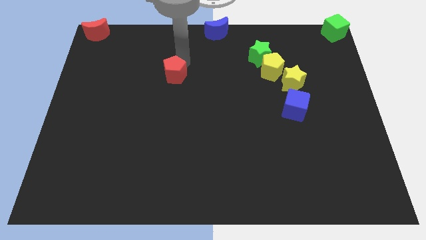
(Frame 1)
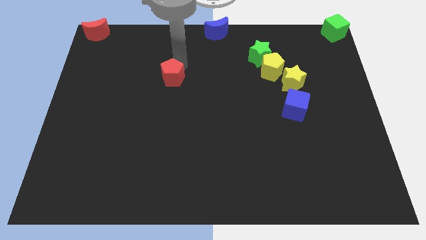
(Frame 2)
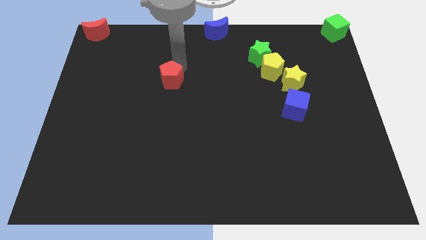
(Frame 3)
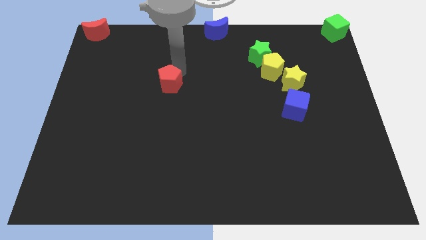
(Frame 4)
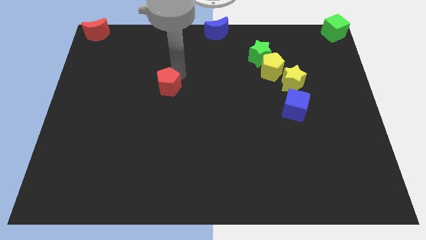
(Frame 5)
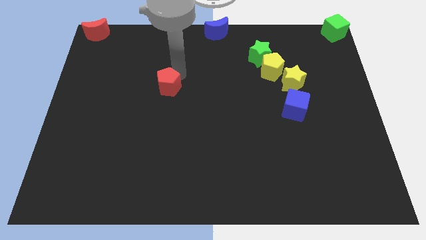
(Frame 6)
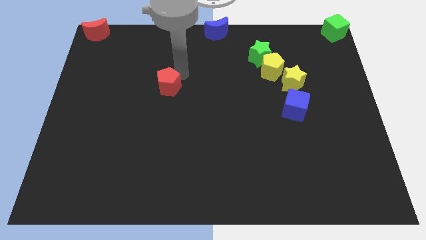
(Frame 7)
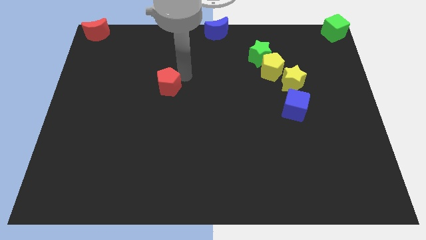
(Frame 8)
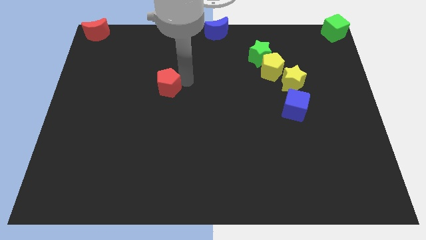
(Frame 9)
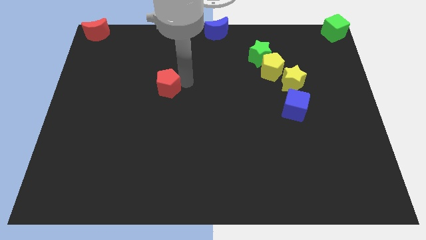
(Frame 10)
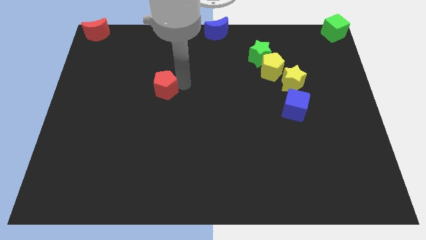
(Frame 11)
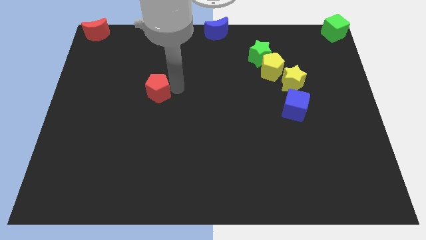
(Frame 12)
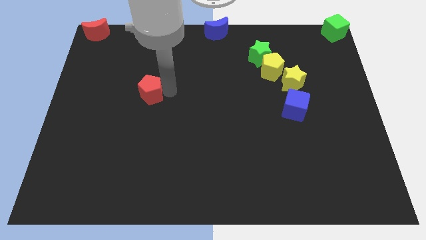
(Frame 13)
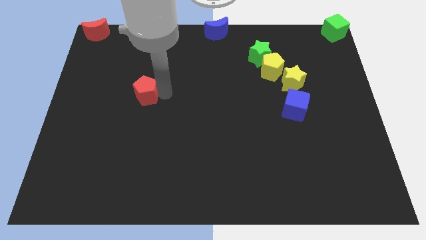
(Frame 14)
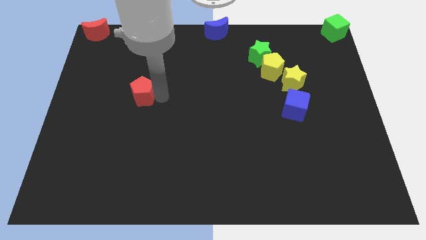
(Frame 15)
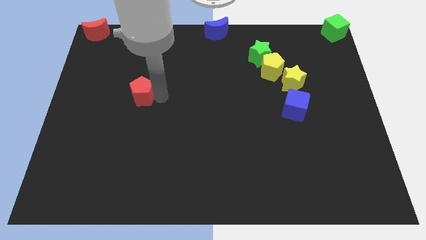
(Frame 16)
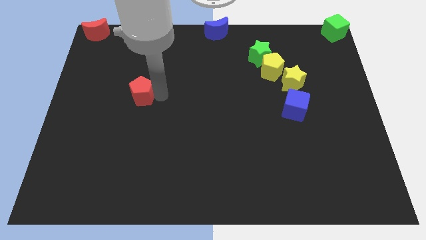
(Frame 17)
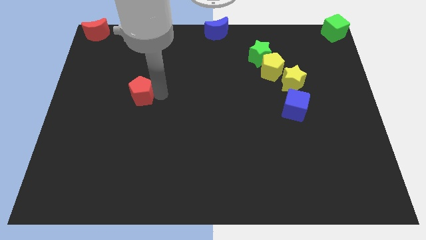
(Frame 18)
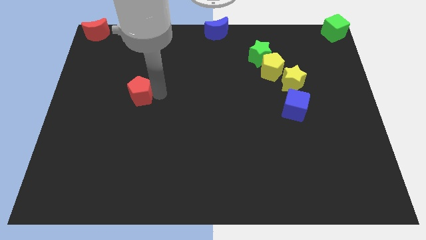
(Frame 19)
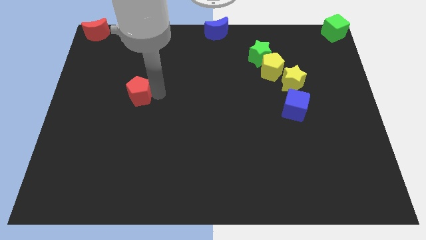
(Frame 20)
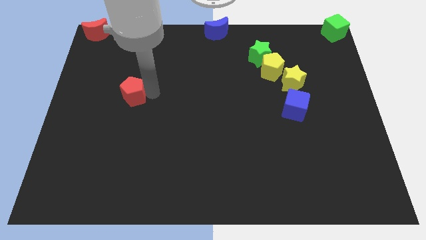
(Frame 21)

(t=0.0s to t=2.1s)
push the red pentagon to the left side of the table

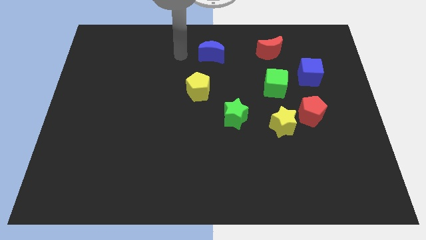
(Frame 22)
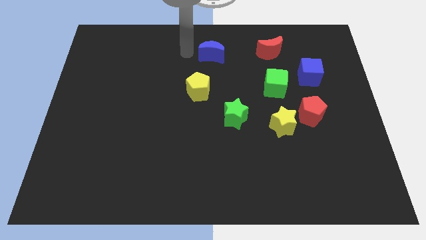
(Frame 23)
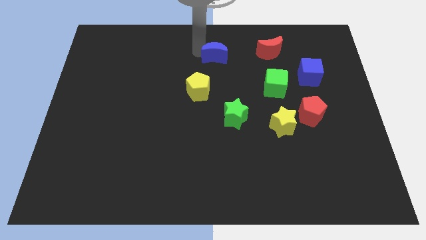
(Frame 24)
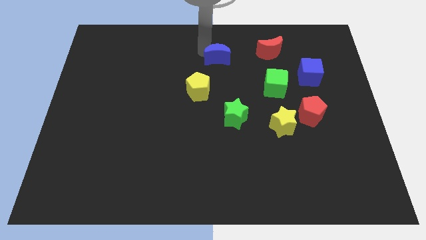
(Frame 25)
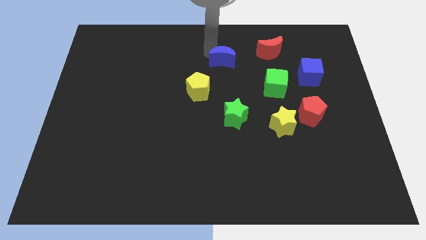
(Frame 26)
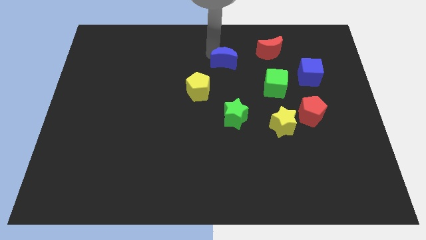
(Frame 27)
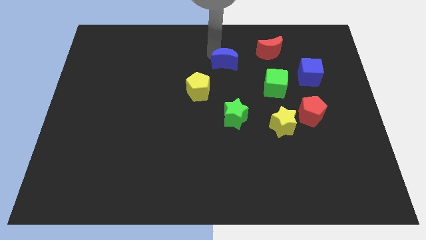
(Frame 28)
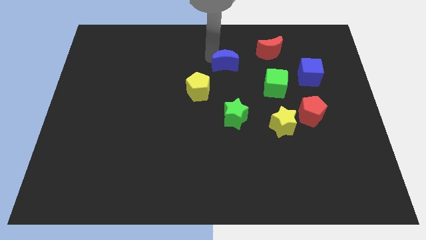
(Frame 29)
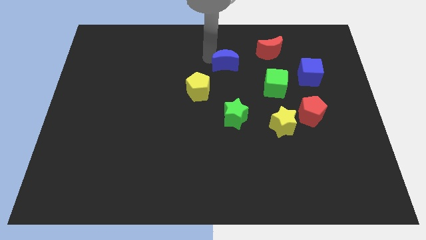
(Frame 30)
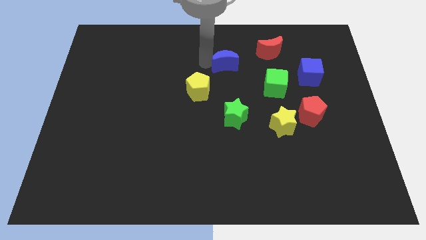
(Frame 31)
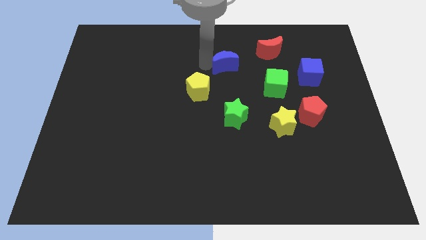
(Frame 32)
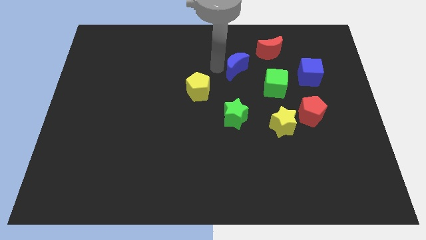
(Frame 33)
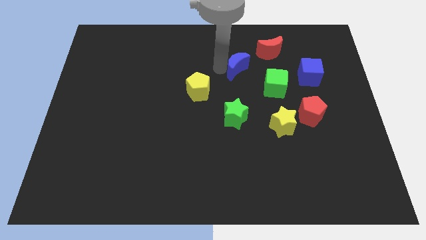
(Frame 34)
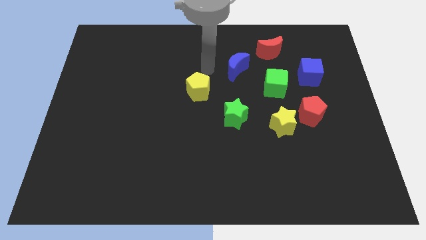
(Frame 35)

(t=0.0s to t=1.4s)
place the blue moon above the green star

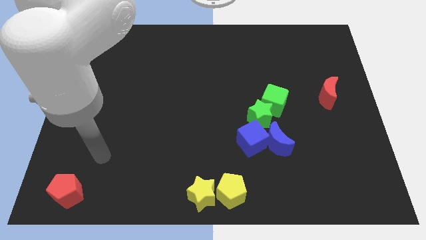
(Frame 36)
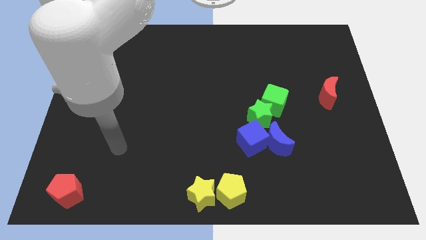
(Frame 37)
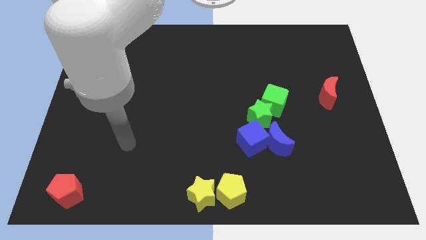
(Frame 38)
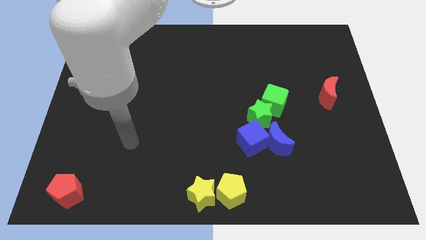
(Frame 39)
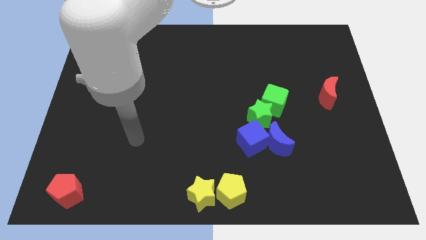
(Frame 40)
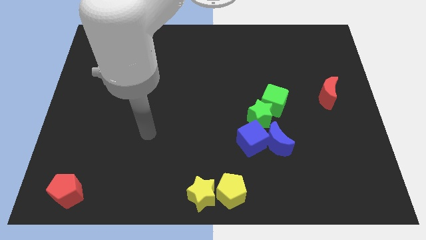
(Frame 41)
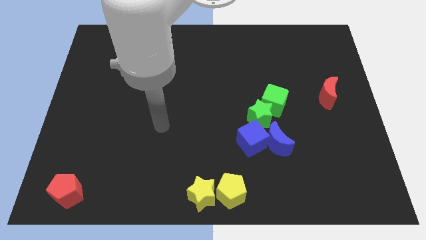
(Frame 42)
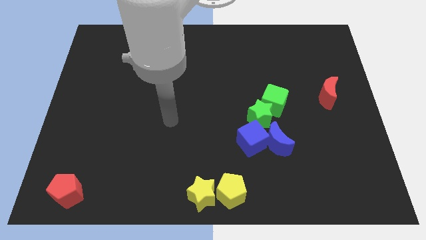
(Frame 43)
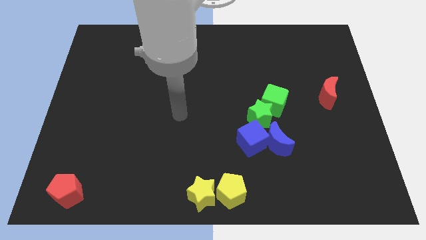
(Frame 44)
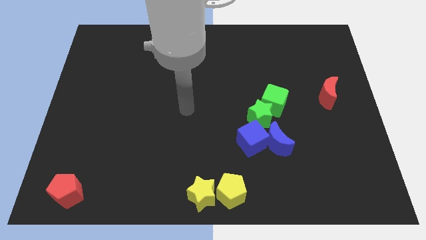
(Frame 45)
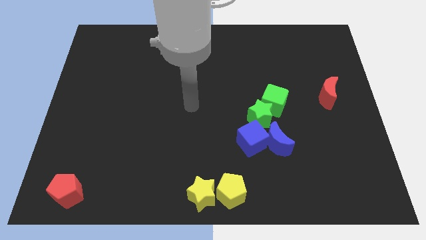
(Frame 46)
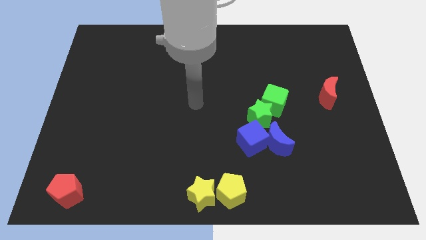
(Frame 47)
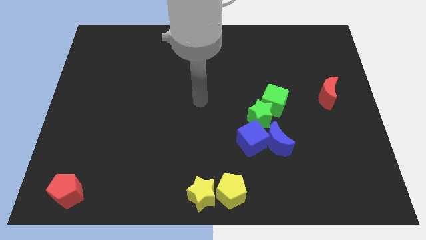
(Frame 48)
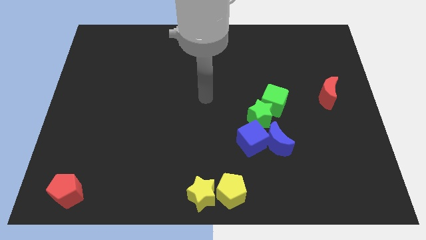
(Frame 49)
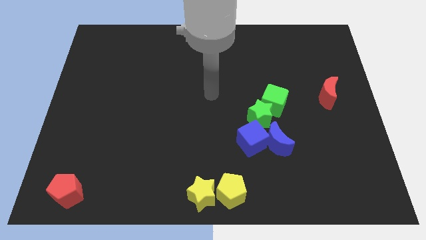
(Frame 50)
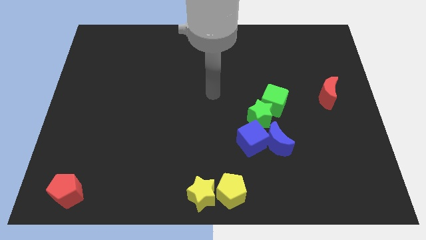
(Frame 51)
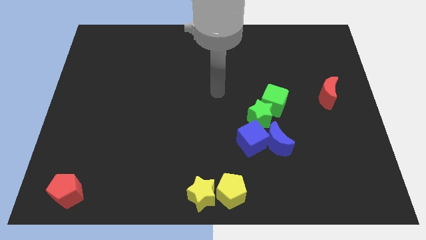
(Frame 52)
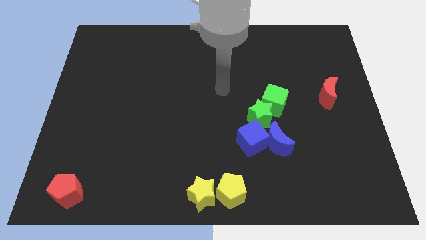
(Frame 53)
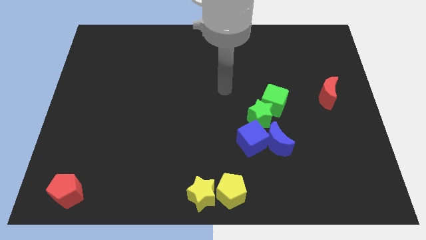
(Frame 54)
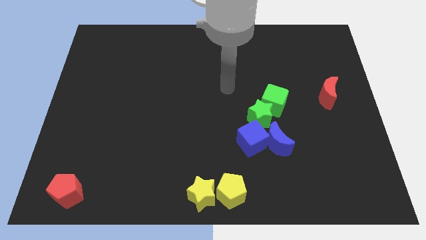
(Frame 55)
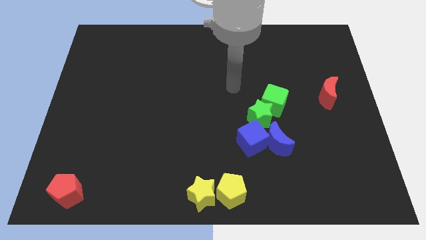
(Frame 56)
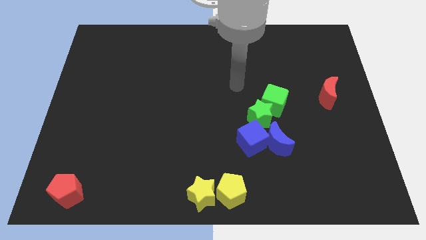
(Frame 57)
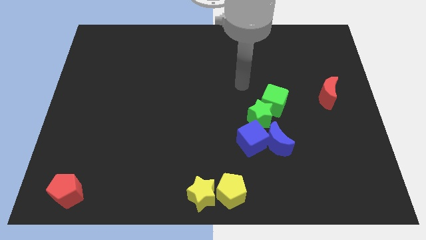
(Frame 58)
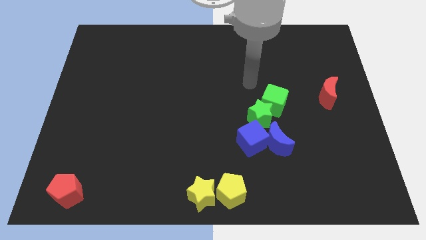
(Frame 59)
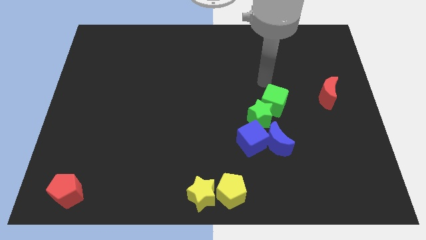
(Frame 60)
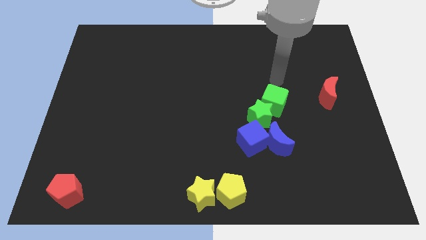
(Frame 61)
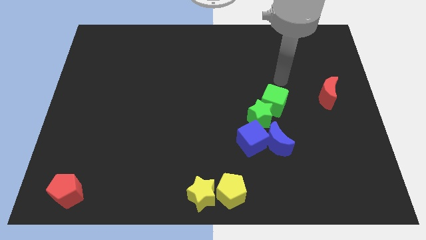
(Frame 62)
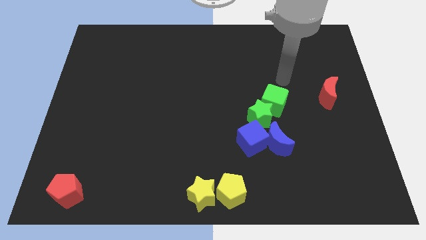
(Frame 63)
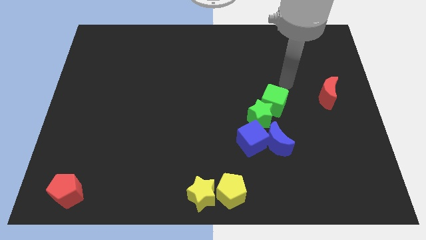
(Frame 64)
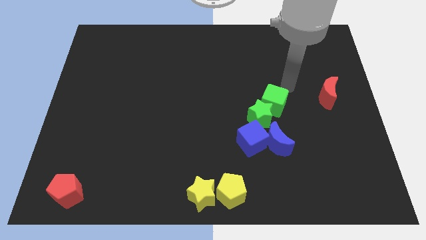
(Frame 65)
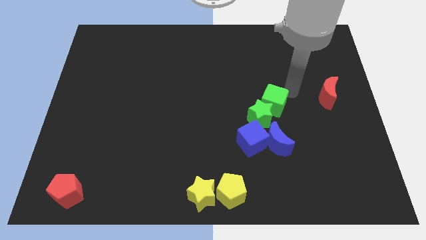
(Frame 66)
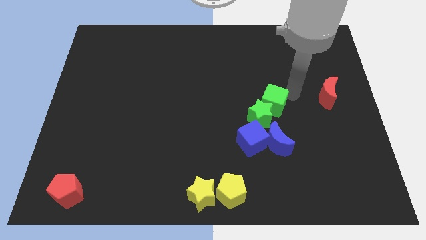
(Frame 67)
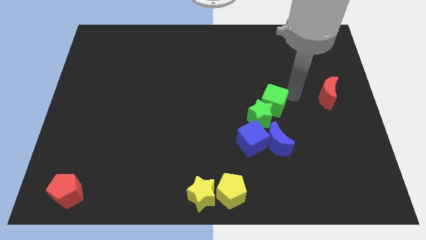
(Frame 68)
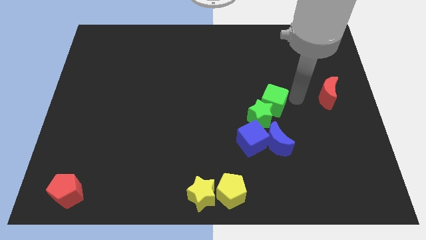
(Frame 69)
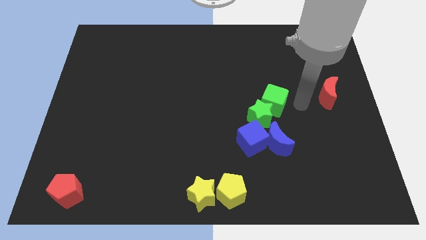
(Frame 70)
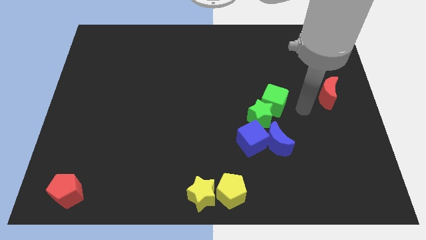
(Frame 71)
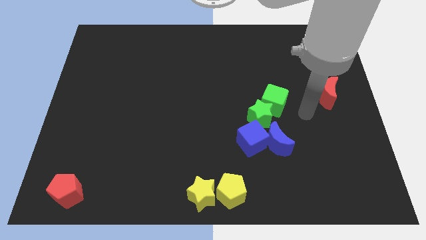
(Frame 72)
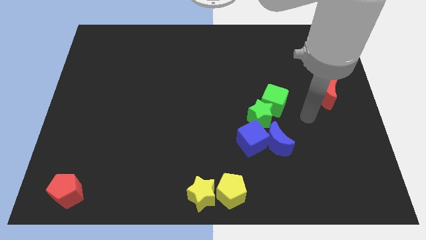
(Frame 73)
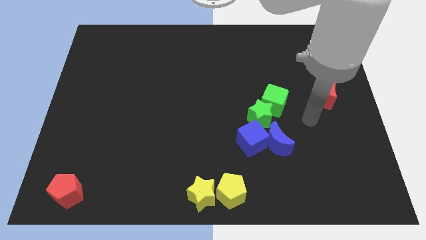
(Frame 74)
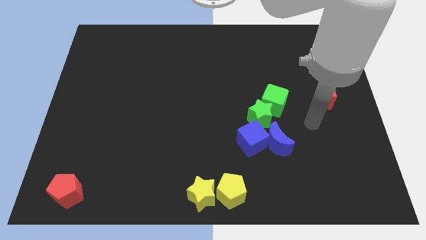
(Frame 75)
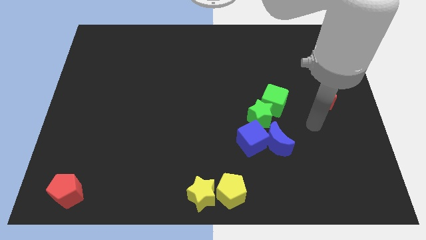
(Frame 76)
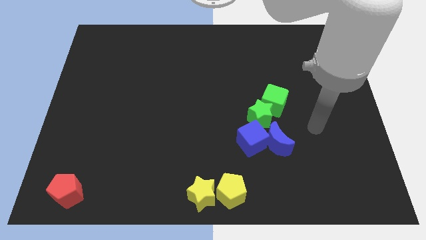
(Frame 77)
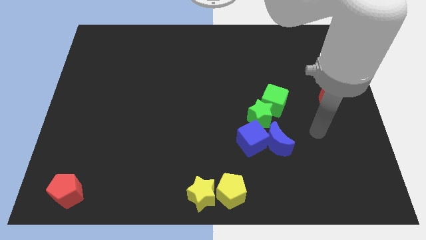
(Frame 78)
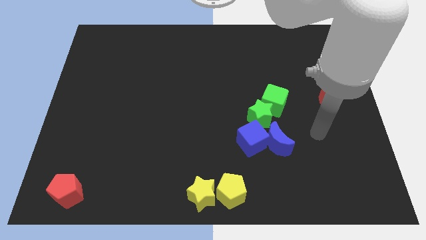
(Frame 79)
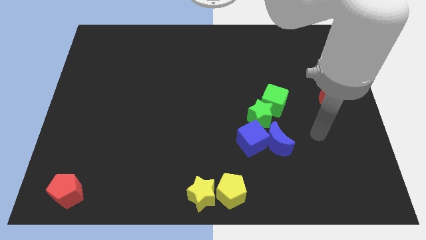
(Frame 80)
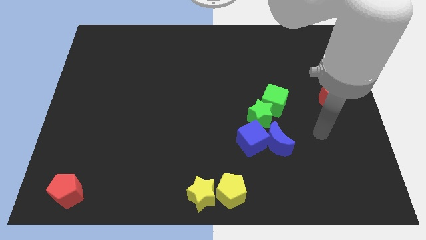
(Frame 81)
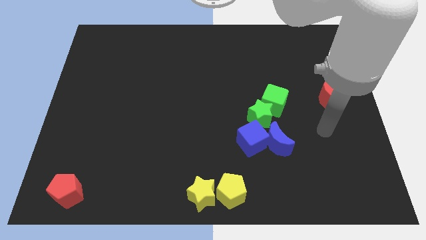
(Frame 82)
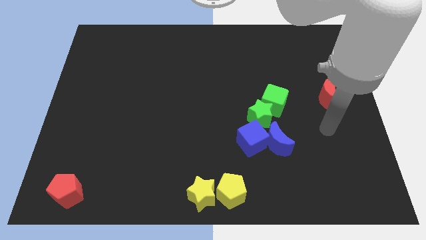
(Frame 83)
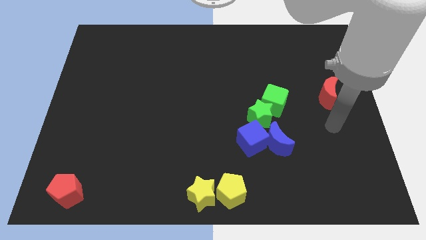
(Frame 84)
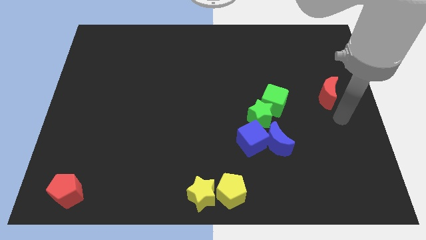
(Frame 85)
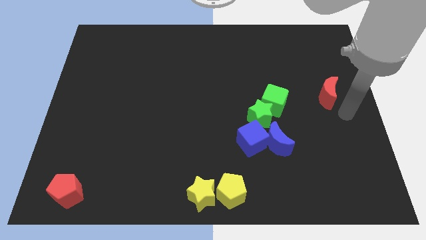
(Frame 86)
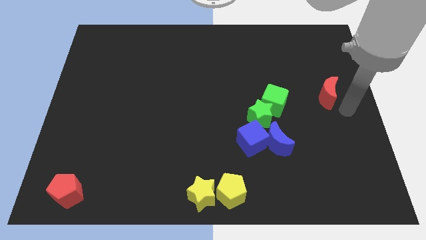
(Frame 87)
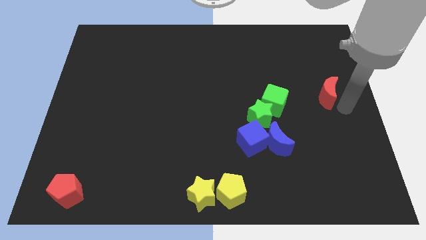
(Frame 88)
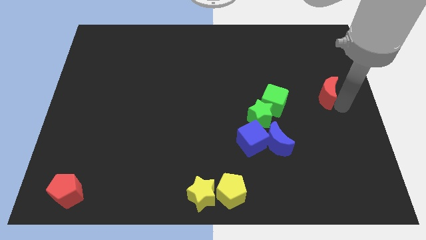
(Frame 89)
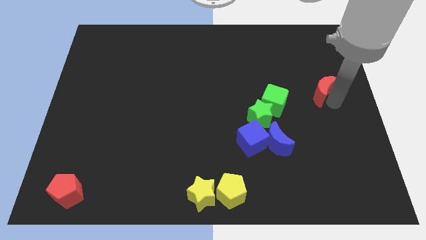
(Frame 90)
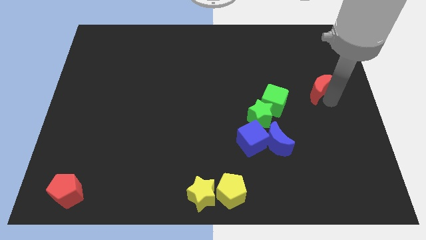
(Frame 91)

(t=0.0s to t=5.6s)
place the arm right to the red moon
